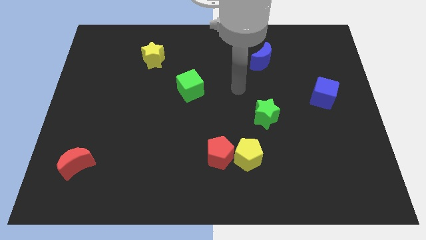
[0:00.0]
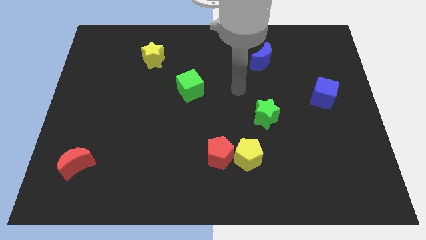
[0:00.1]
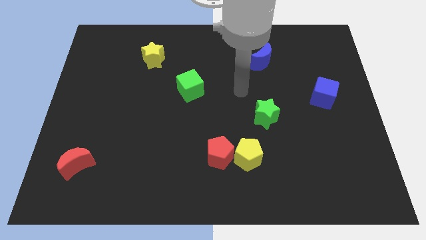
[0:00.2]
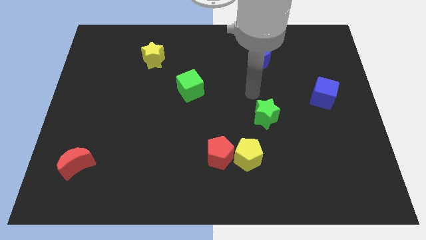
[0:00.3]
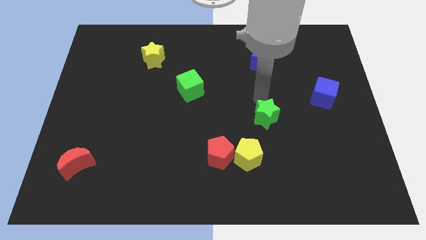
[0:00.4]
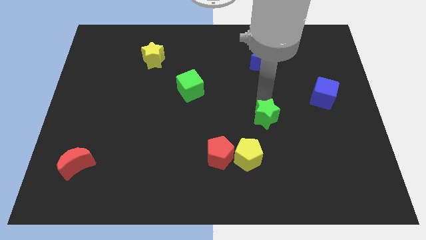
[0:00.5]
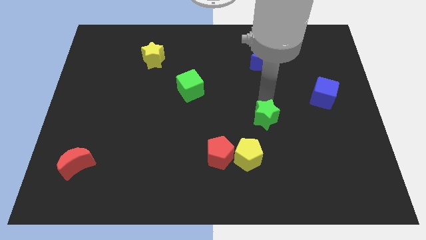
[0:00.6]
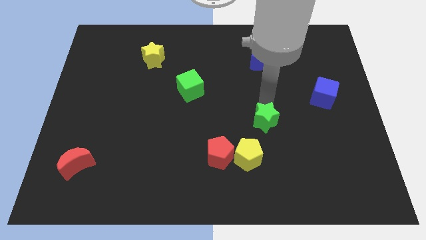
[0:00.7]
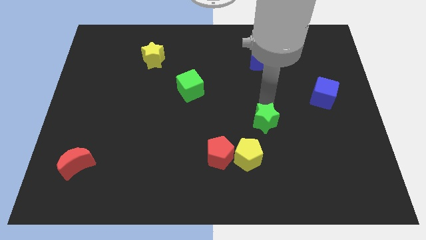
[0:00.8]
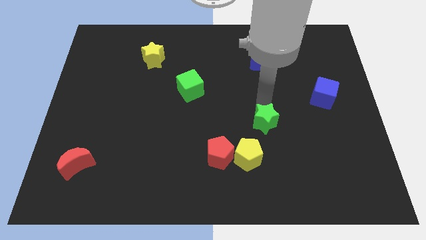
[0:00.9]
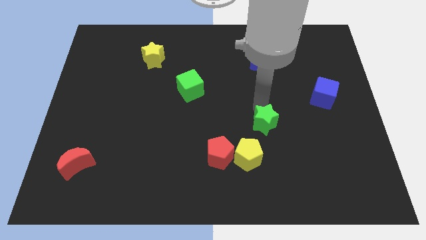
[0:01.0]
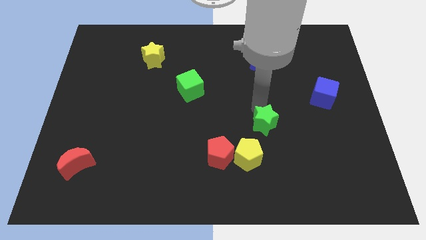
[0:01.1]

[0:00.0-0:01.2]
push the green star towards the yellow pentagon

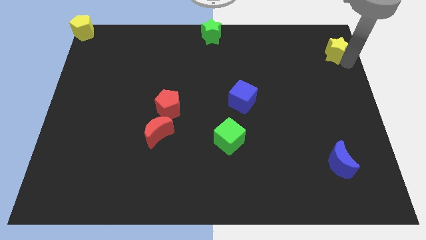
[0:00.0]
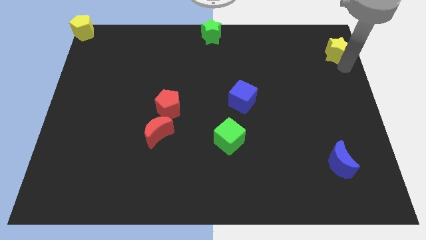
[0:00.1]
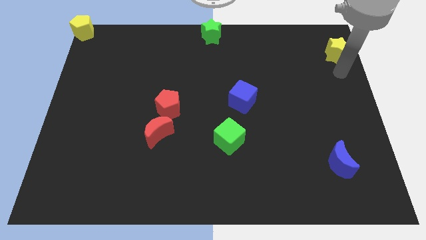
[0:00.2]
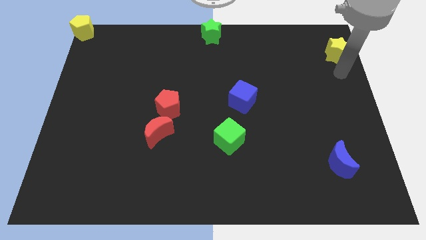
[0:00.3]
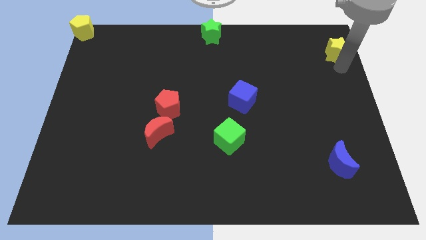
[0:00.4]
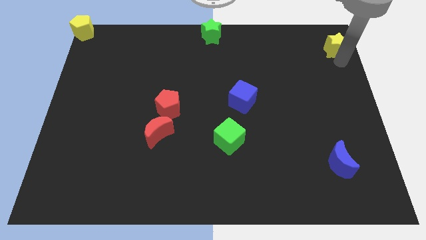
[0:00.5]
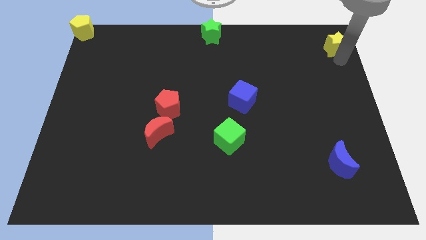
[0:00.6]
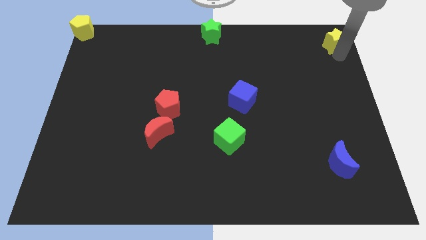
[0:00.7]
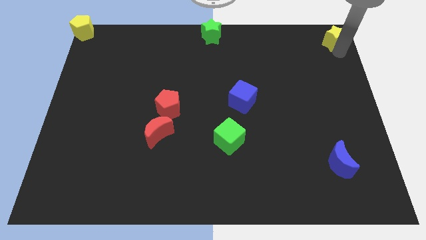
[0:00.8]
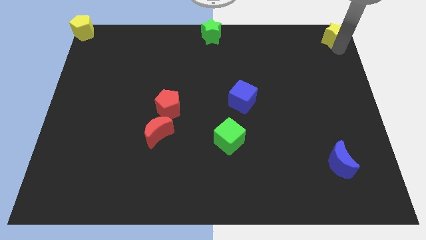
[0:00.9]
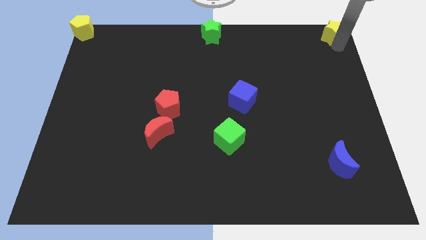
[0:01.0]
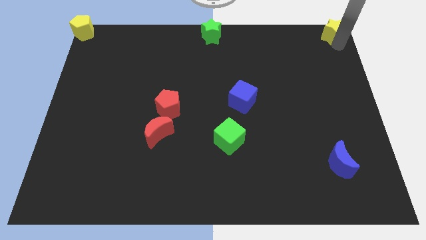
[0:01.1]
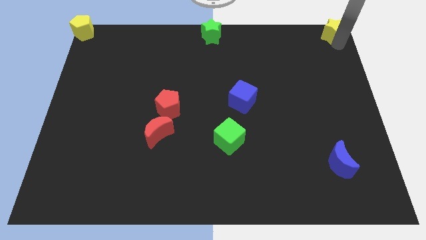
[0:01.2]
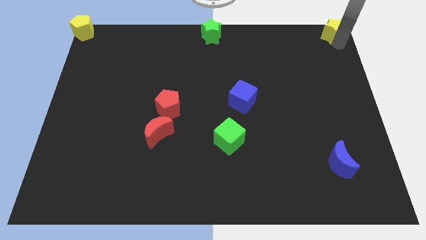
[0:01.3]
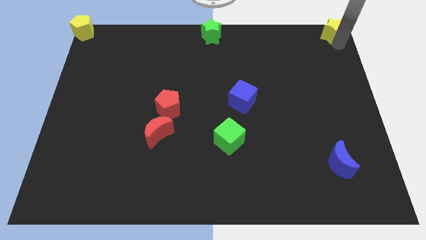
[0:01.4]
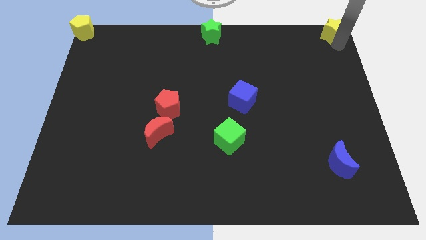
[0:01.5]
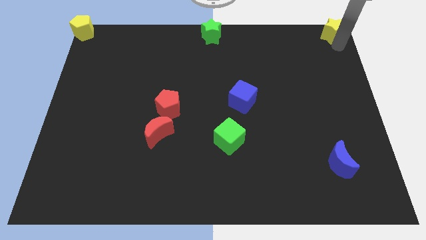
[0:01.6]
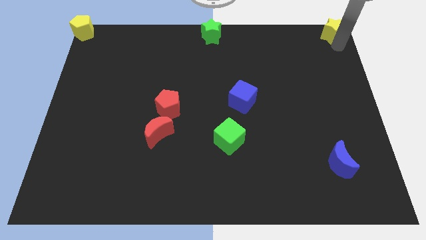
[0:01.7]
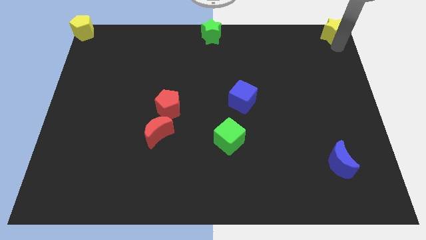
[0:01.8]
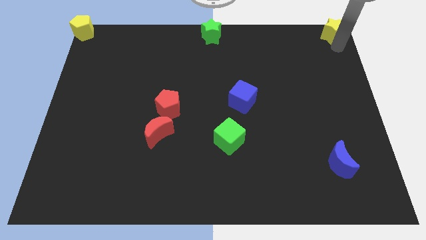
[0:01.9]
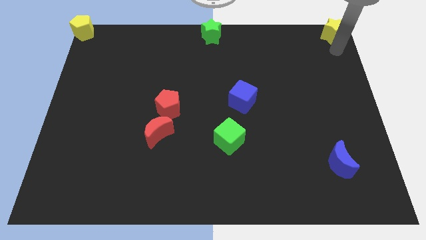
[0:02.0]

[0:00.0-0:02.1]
place the yellow star at the top right corner of the board

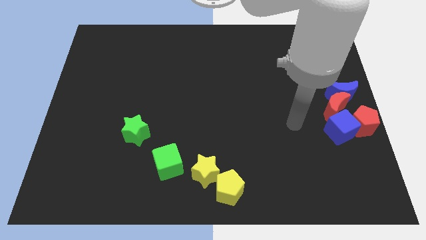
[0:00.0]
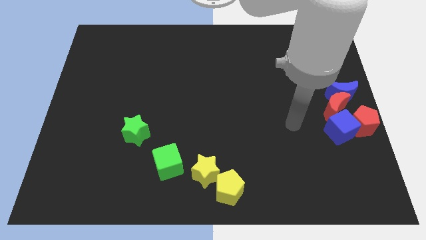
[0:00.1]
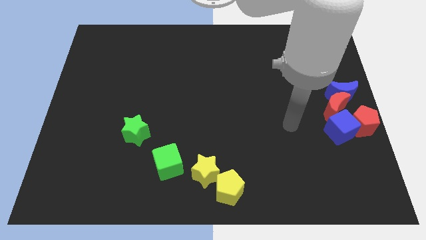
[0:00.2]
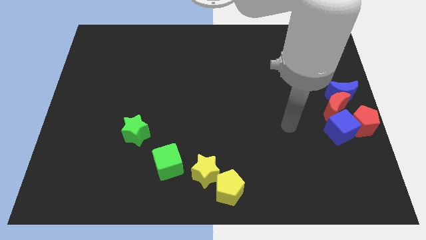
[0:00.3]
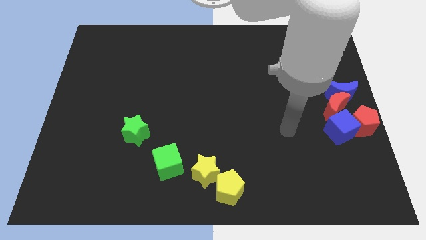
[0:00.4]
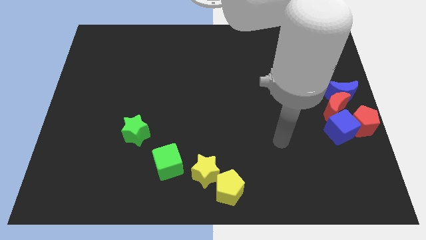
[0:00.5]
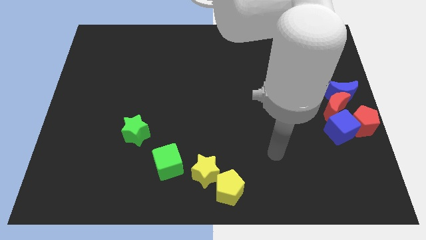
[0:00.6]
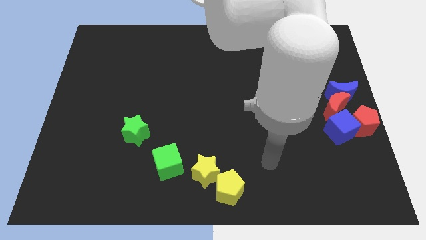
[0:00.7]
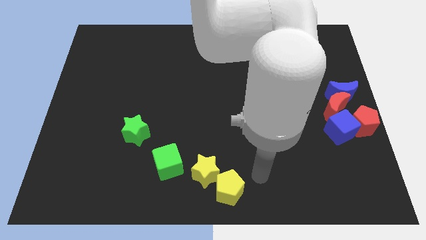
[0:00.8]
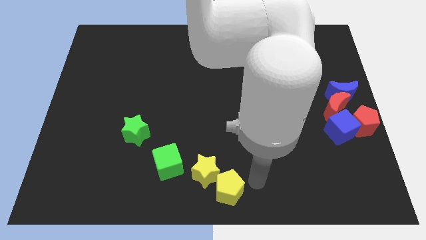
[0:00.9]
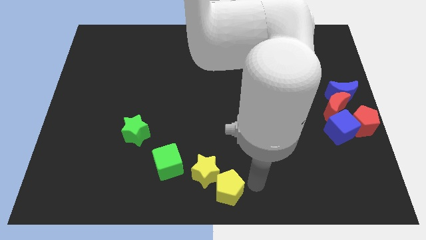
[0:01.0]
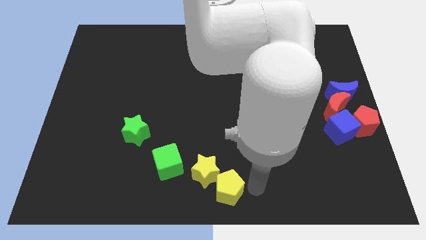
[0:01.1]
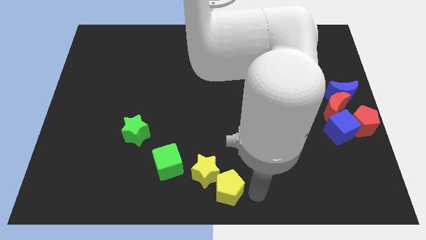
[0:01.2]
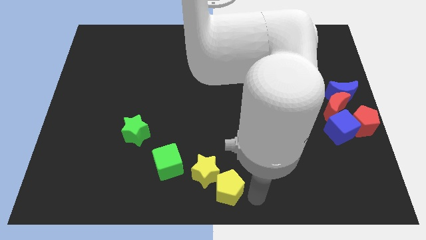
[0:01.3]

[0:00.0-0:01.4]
move the arm to the bottom center

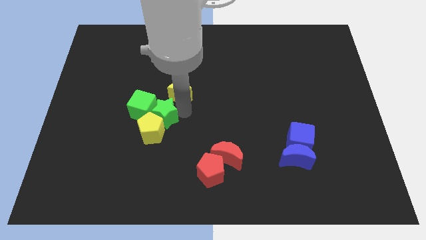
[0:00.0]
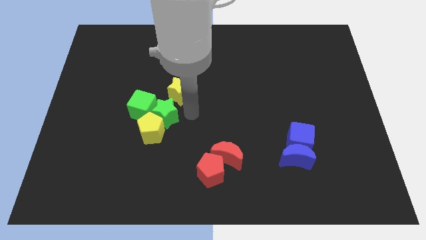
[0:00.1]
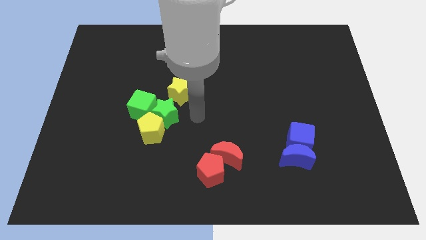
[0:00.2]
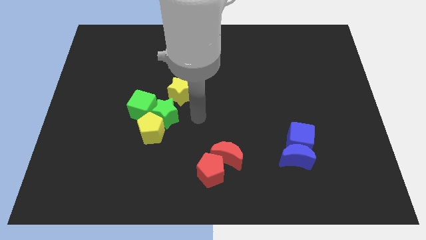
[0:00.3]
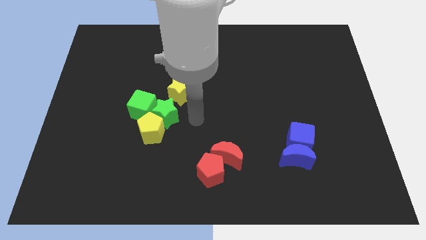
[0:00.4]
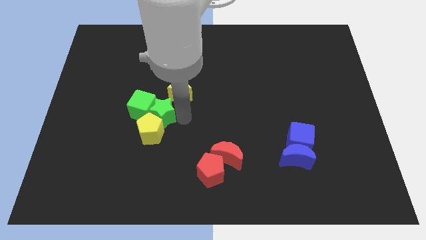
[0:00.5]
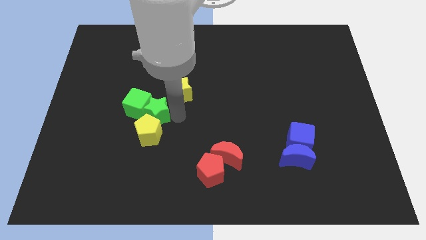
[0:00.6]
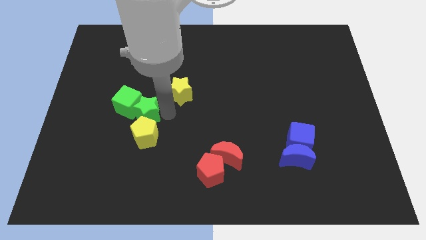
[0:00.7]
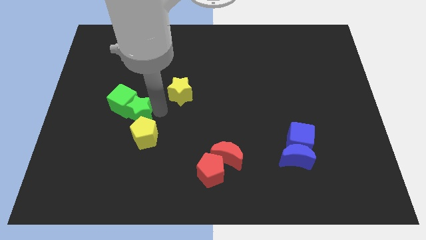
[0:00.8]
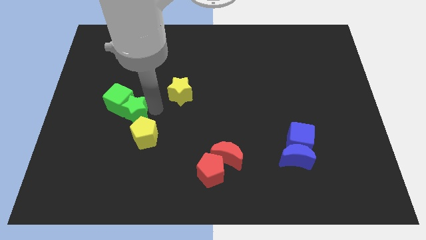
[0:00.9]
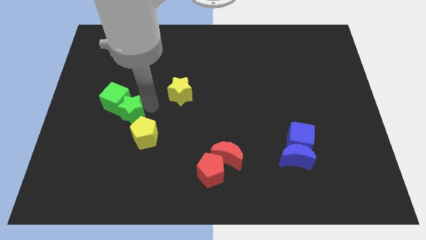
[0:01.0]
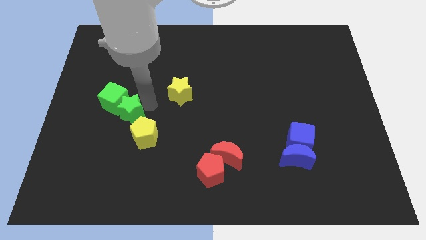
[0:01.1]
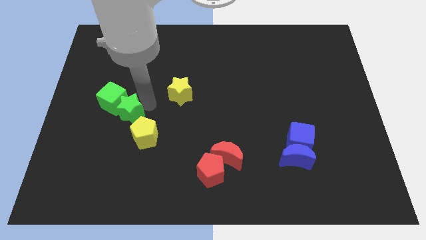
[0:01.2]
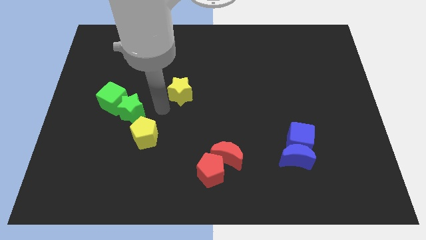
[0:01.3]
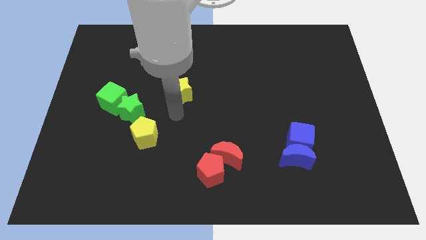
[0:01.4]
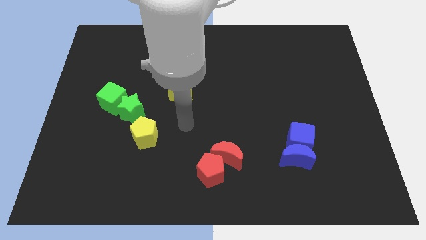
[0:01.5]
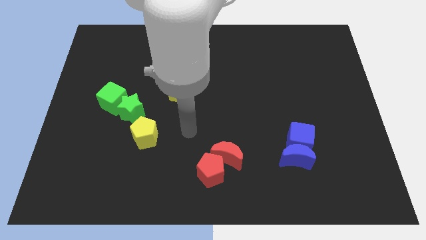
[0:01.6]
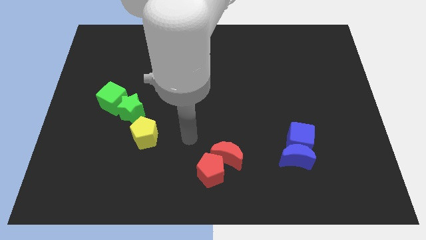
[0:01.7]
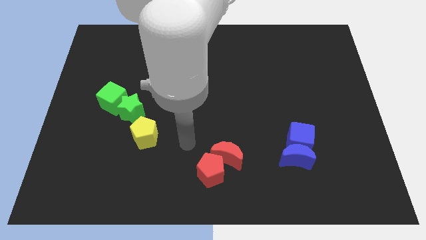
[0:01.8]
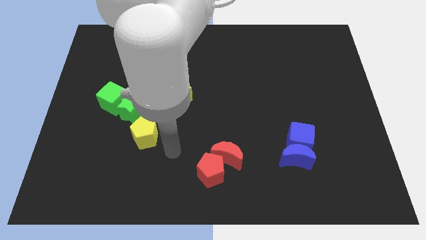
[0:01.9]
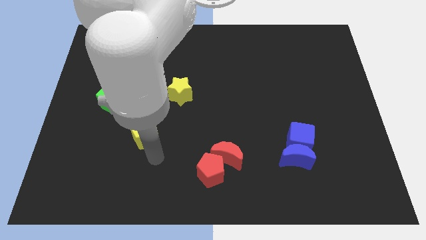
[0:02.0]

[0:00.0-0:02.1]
move green star along with green cube to the left center

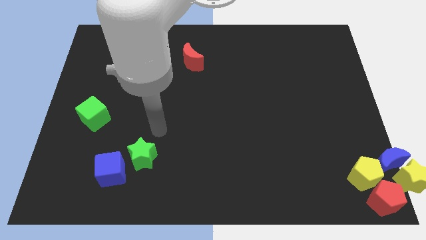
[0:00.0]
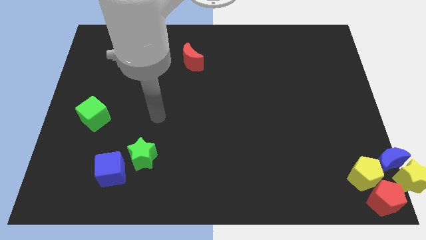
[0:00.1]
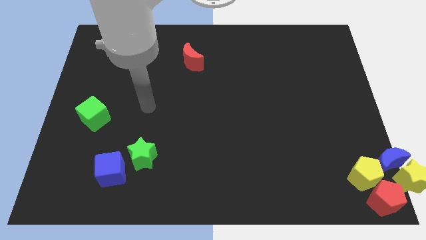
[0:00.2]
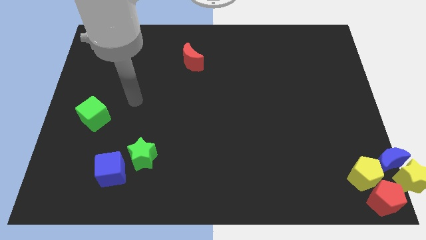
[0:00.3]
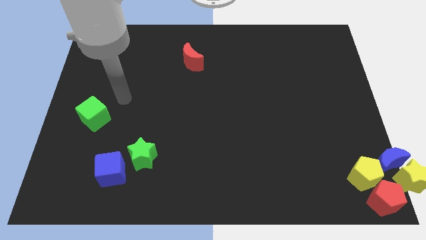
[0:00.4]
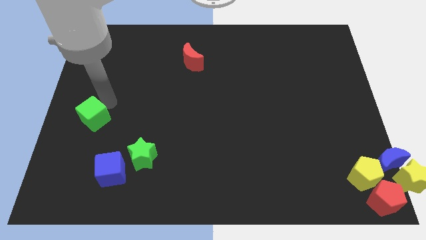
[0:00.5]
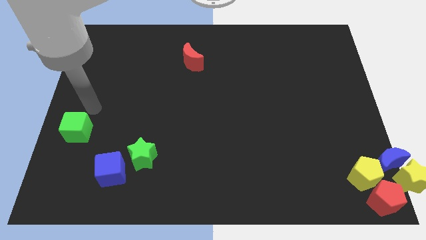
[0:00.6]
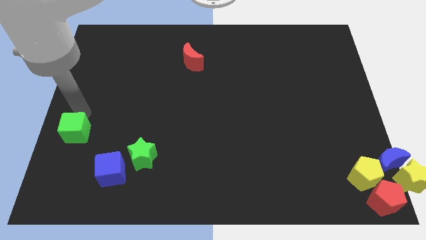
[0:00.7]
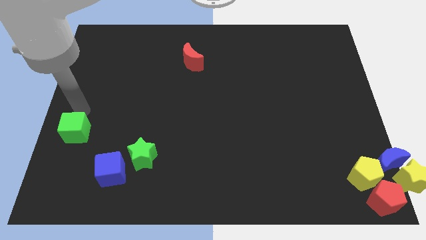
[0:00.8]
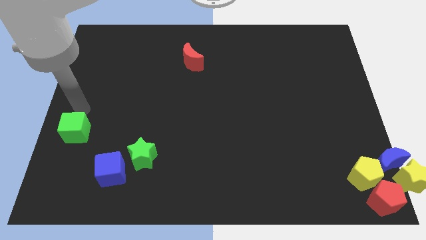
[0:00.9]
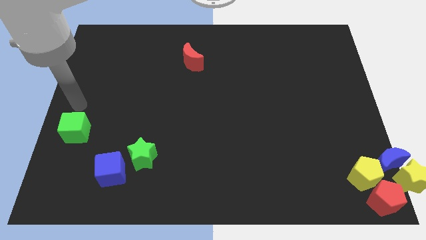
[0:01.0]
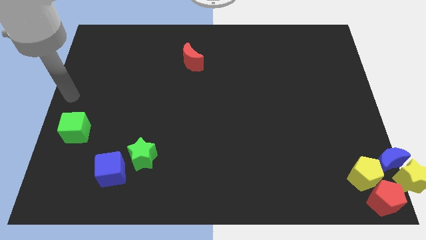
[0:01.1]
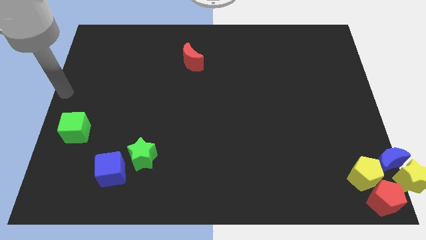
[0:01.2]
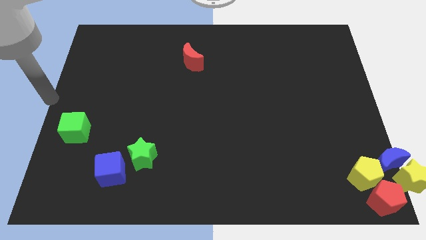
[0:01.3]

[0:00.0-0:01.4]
slightly move the green cube towards the blue cube

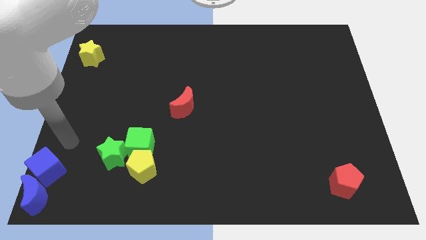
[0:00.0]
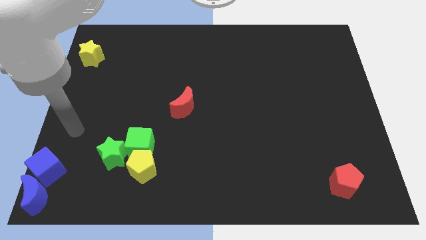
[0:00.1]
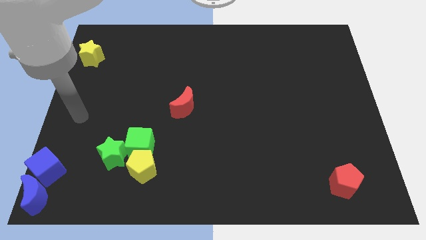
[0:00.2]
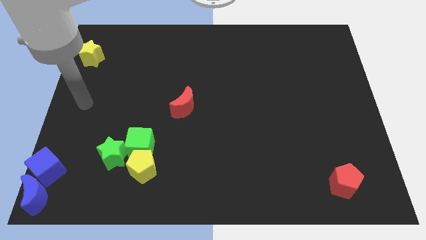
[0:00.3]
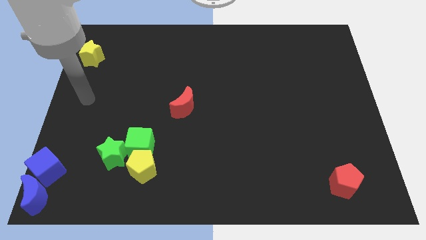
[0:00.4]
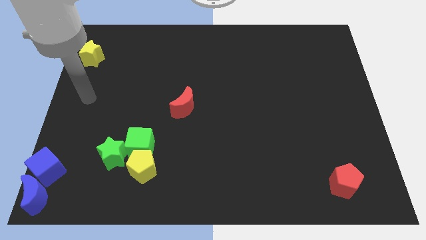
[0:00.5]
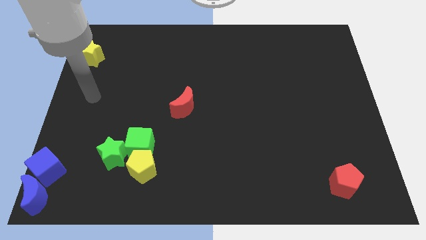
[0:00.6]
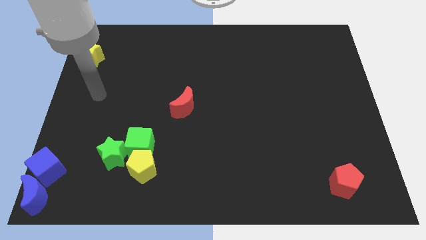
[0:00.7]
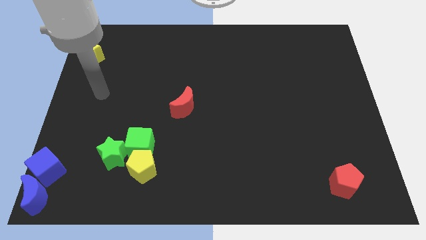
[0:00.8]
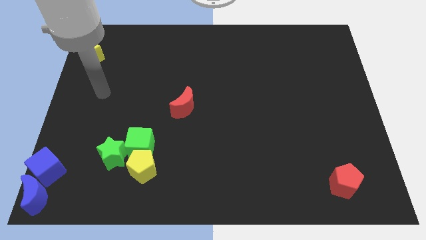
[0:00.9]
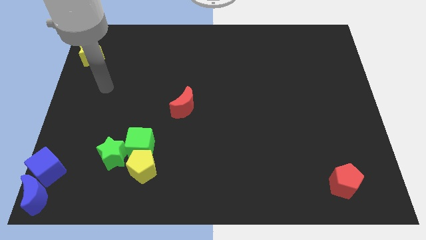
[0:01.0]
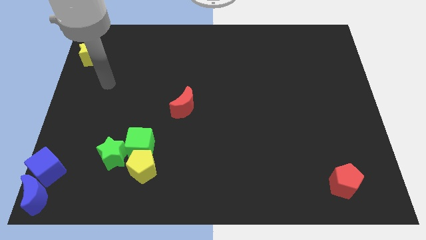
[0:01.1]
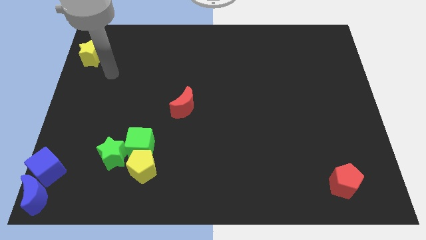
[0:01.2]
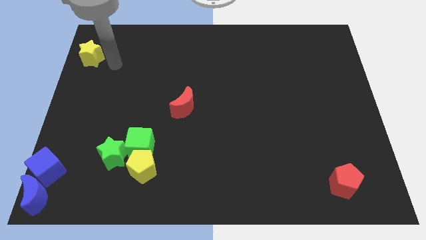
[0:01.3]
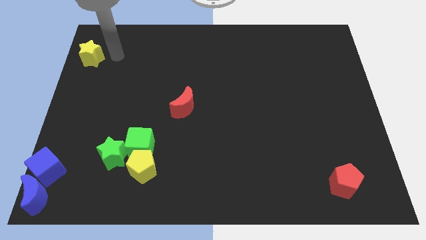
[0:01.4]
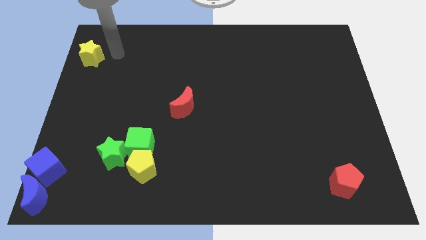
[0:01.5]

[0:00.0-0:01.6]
point your arm at the right of the yellow star